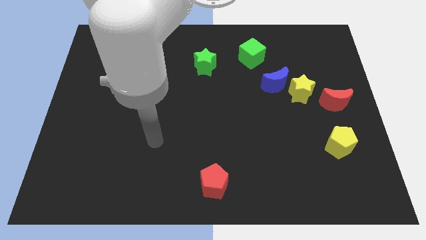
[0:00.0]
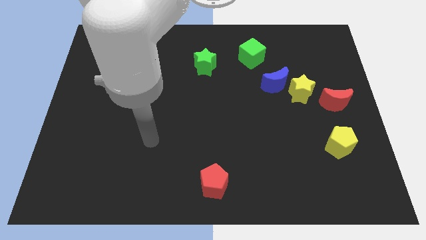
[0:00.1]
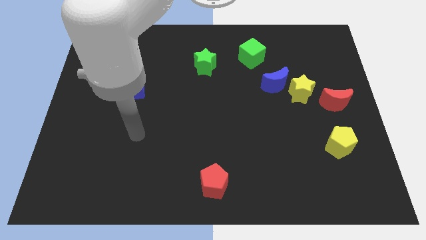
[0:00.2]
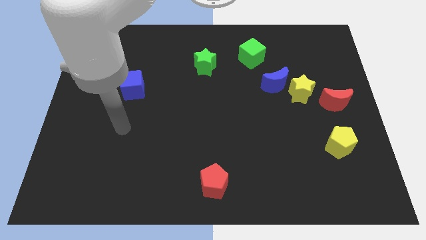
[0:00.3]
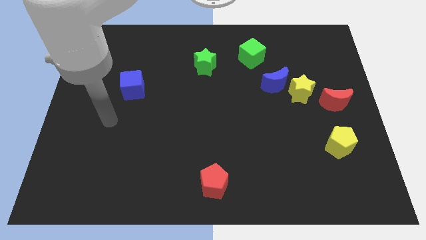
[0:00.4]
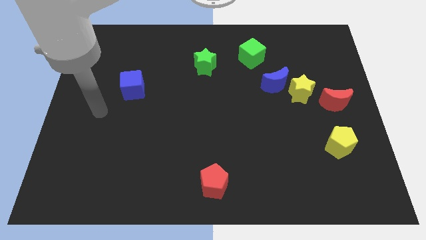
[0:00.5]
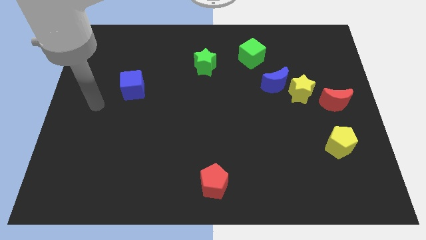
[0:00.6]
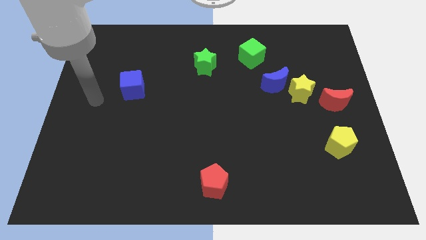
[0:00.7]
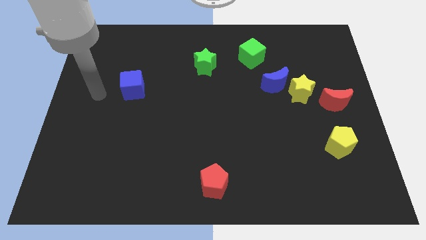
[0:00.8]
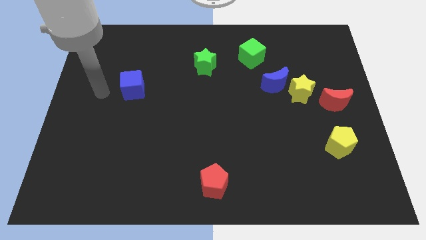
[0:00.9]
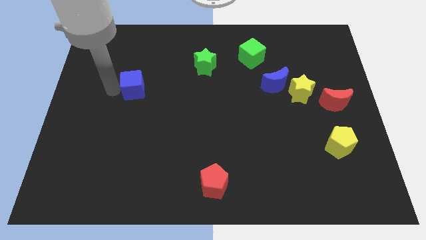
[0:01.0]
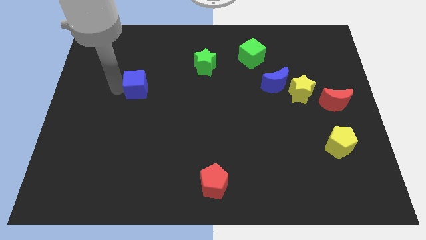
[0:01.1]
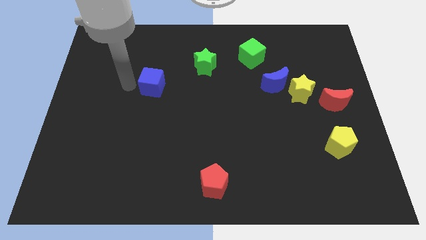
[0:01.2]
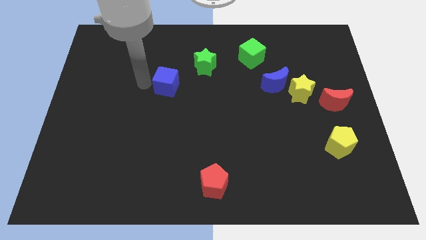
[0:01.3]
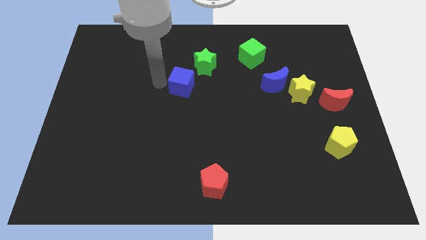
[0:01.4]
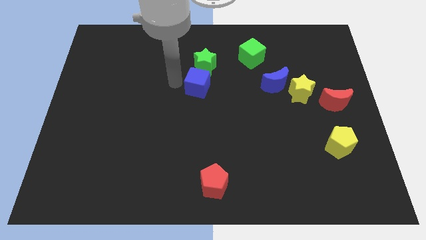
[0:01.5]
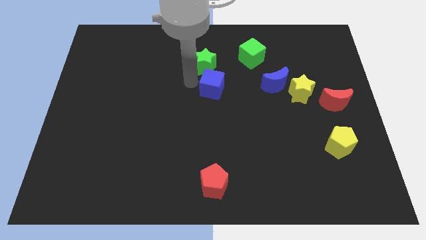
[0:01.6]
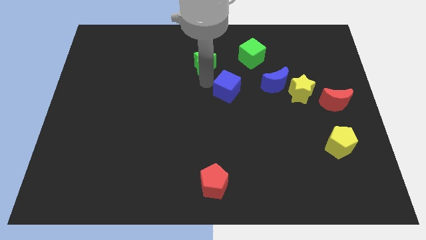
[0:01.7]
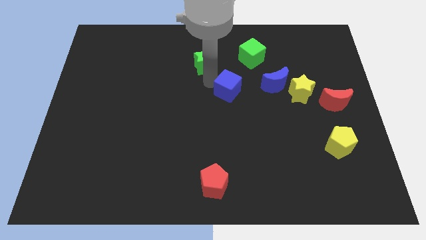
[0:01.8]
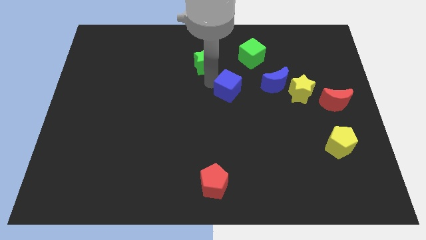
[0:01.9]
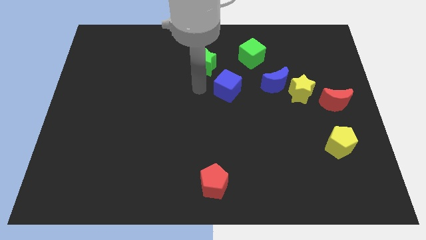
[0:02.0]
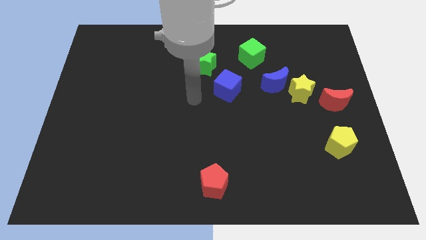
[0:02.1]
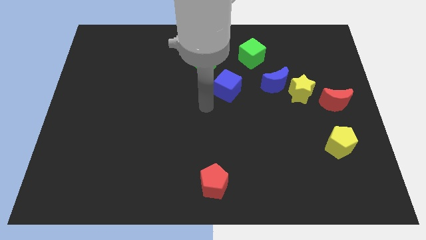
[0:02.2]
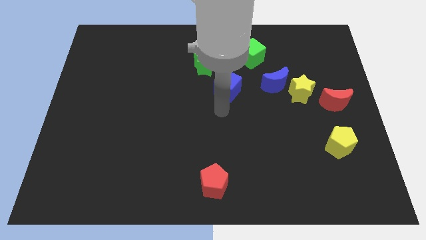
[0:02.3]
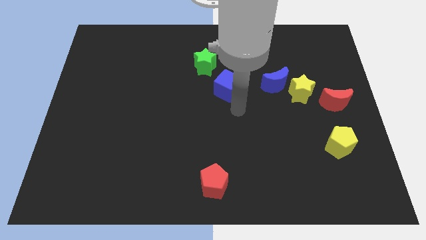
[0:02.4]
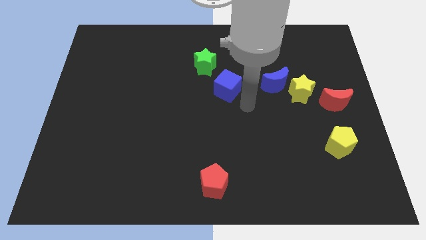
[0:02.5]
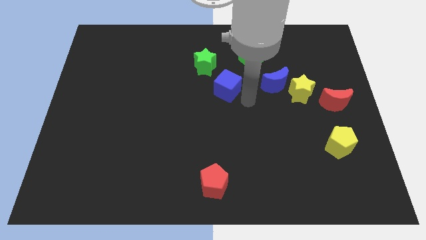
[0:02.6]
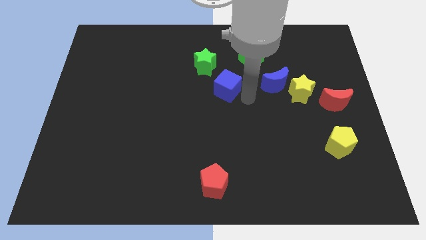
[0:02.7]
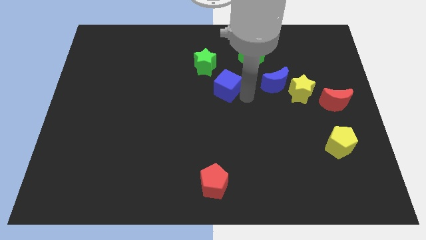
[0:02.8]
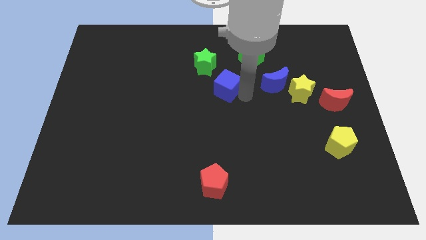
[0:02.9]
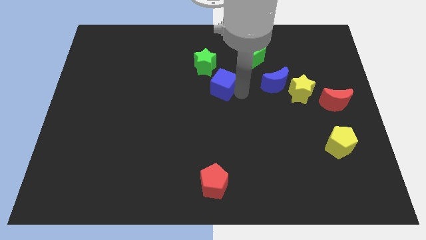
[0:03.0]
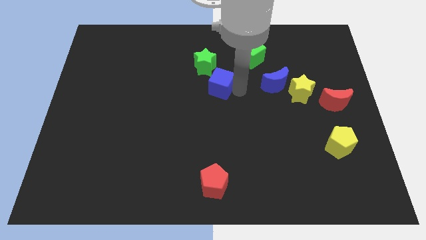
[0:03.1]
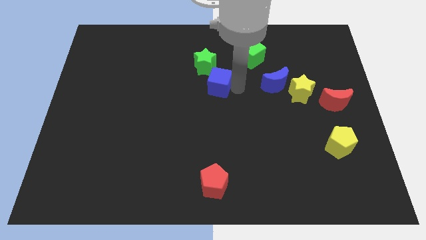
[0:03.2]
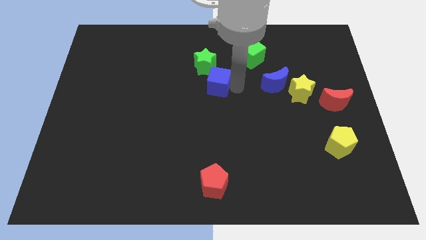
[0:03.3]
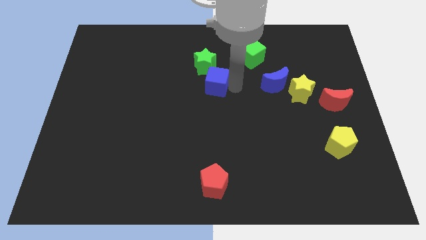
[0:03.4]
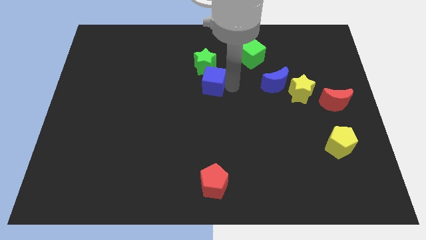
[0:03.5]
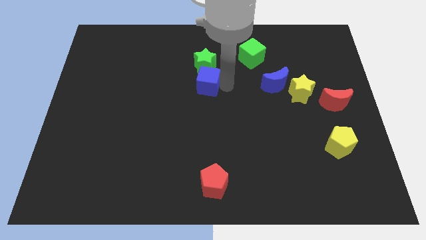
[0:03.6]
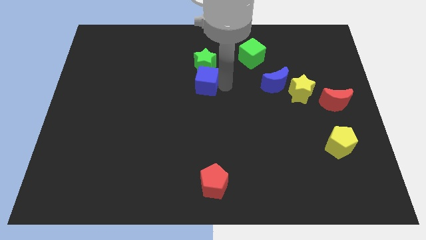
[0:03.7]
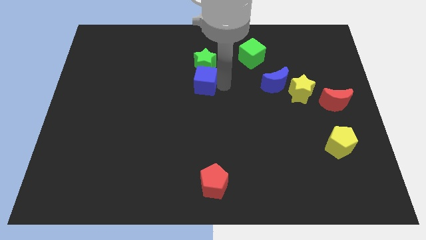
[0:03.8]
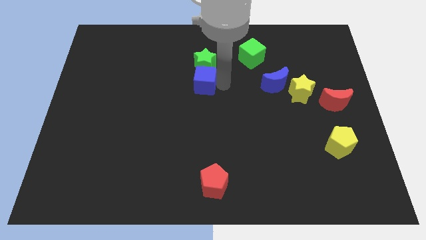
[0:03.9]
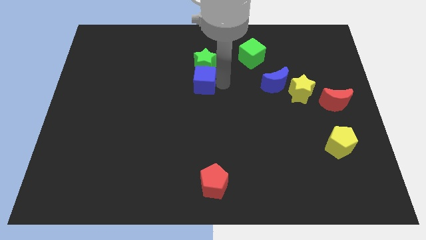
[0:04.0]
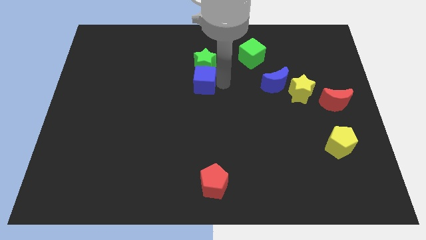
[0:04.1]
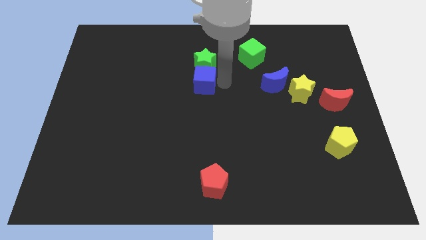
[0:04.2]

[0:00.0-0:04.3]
slide the blue cube to the bottom side of the green star

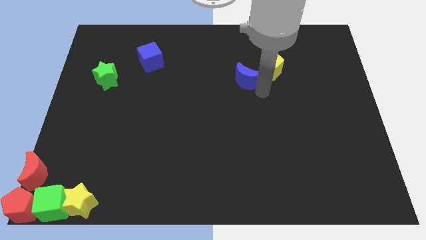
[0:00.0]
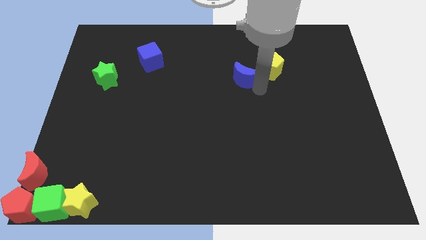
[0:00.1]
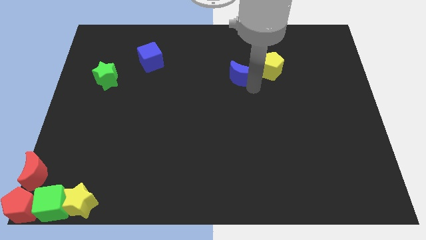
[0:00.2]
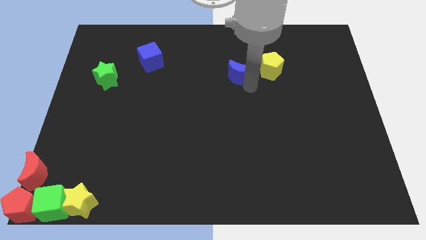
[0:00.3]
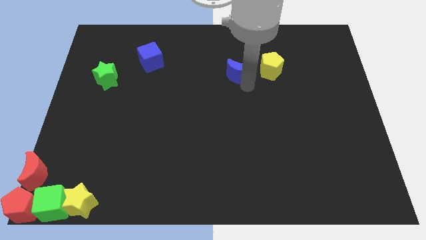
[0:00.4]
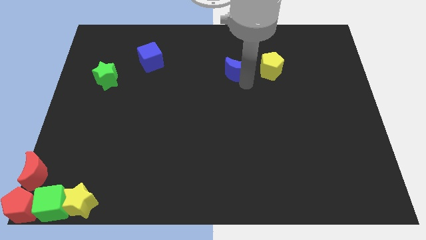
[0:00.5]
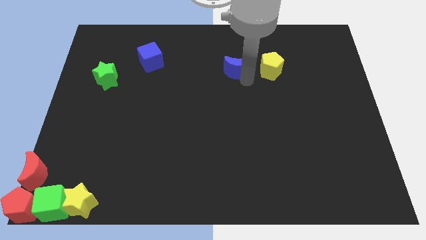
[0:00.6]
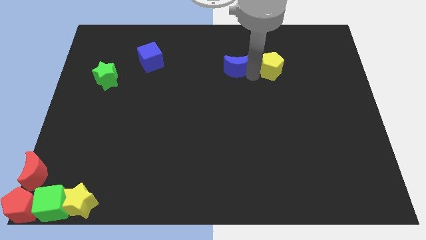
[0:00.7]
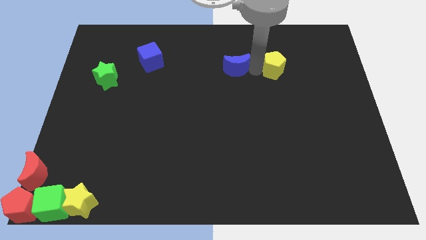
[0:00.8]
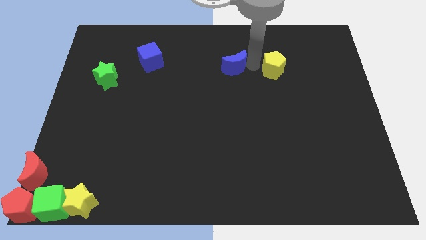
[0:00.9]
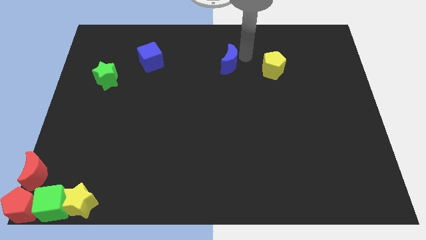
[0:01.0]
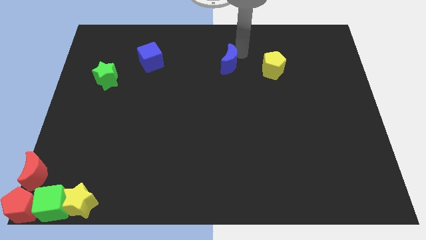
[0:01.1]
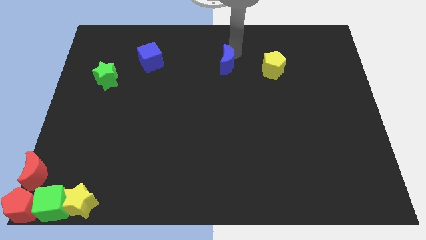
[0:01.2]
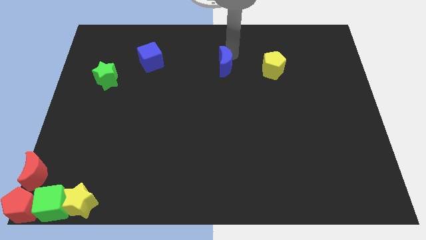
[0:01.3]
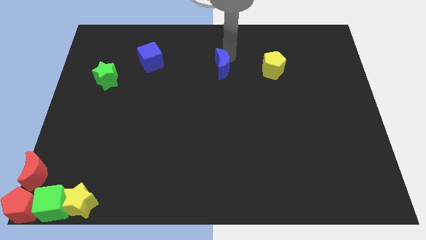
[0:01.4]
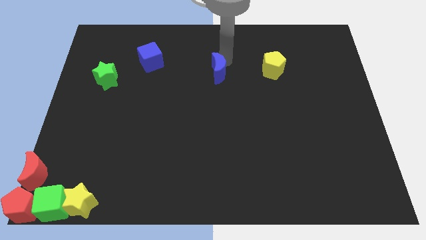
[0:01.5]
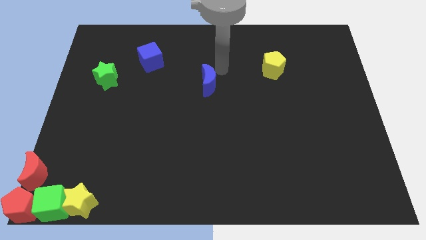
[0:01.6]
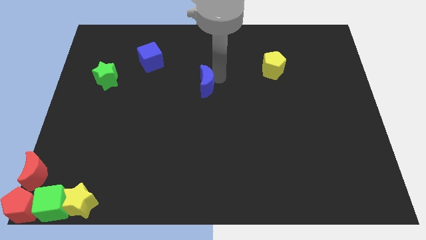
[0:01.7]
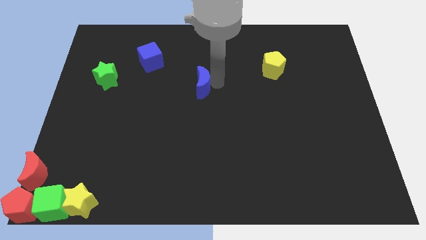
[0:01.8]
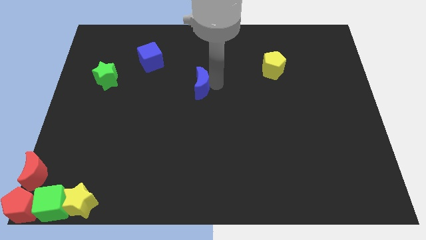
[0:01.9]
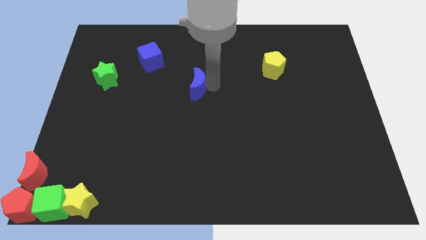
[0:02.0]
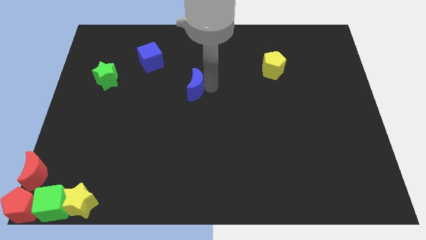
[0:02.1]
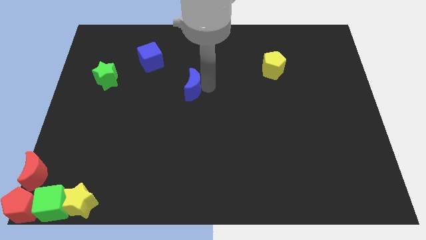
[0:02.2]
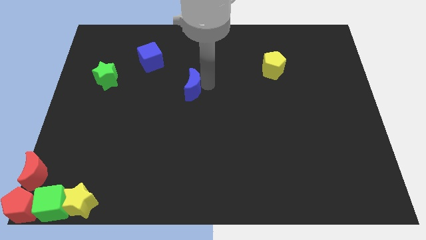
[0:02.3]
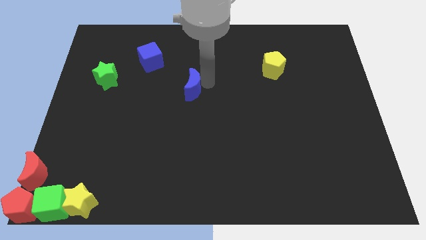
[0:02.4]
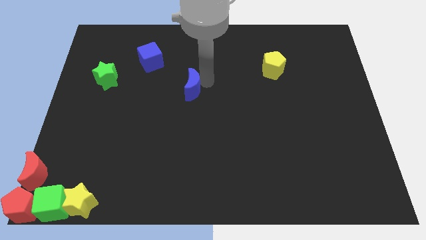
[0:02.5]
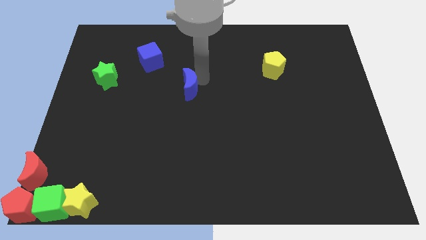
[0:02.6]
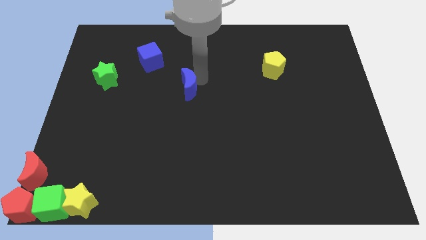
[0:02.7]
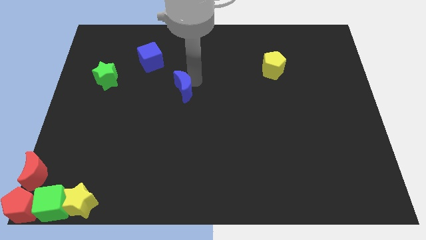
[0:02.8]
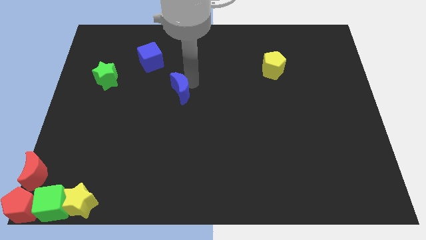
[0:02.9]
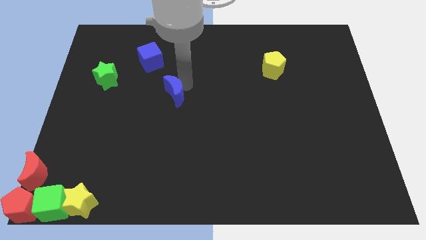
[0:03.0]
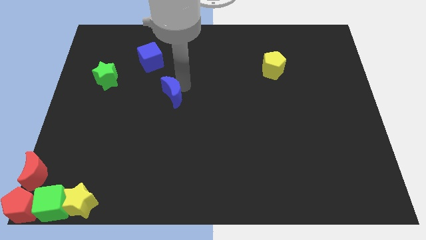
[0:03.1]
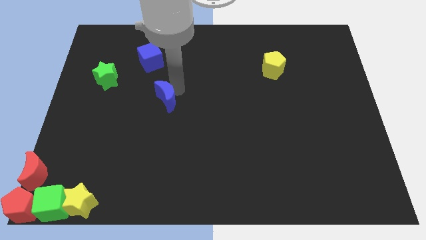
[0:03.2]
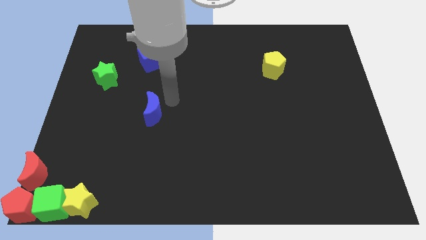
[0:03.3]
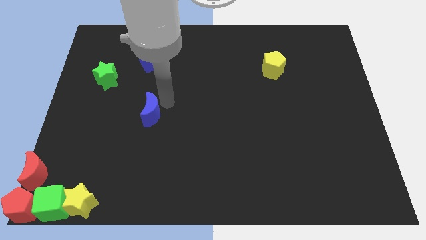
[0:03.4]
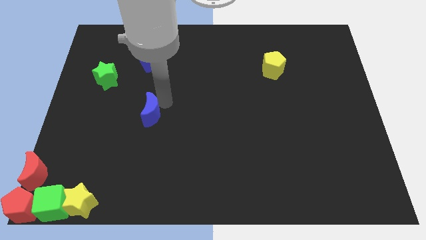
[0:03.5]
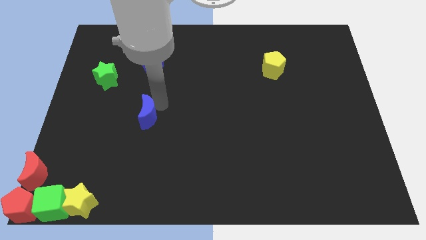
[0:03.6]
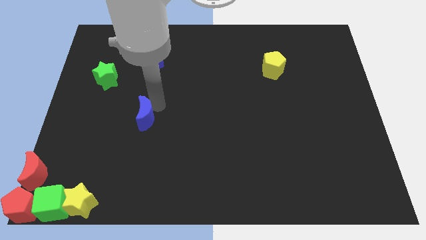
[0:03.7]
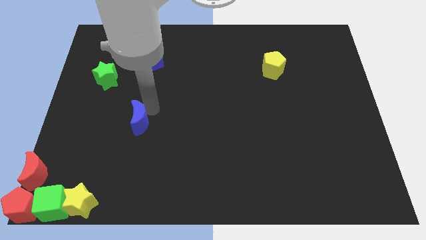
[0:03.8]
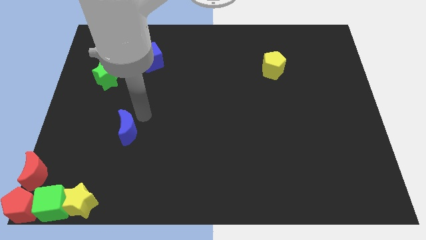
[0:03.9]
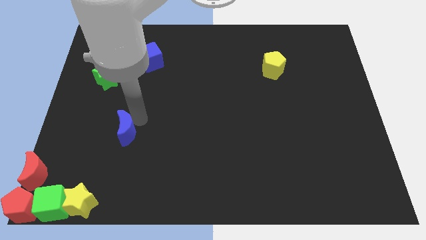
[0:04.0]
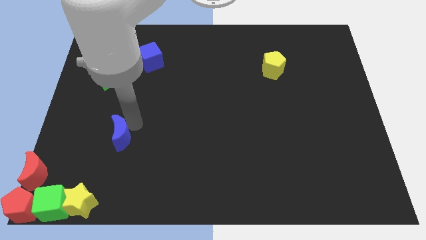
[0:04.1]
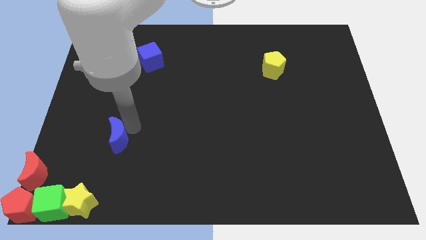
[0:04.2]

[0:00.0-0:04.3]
place the blue moon below the green star

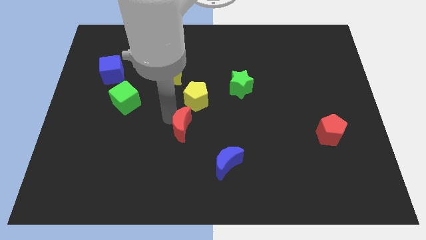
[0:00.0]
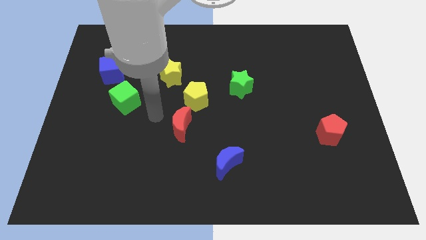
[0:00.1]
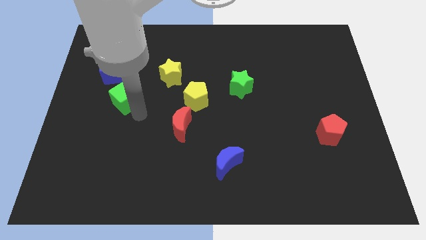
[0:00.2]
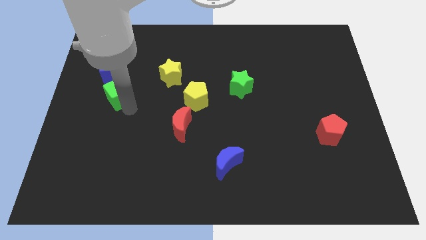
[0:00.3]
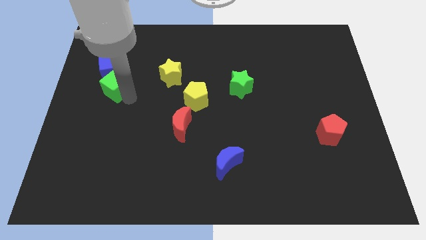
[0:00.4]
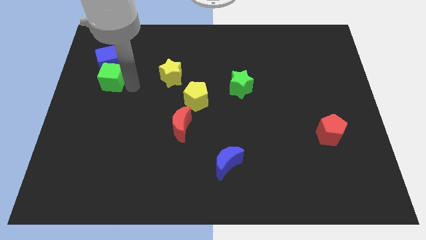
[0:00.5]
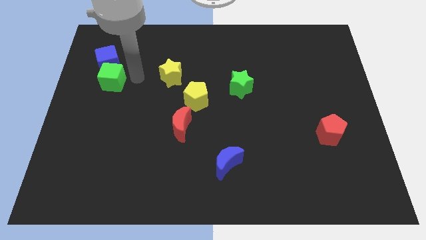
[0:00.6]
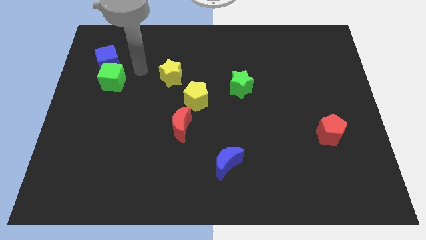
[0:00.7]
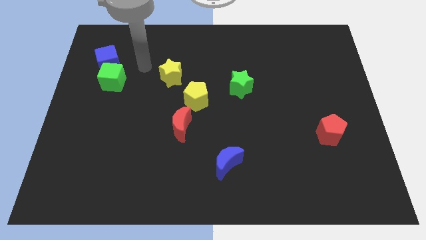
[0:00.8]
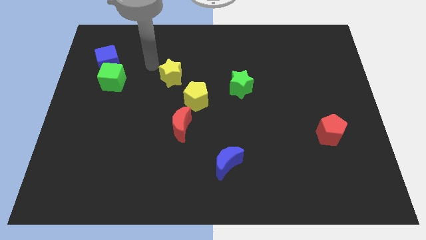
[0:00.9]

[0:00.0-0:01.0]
move the green cube into the blue cube
